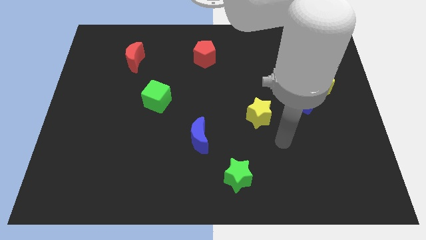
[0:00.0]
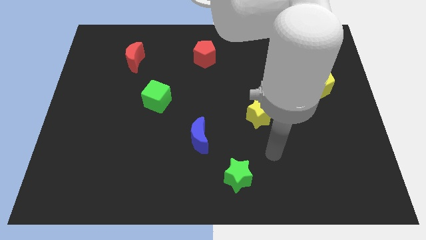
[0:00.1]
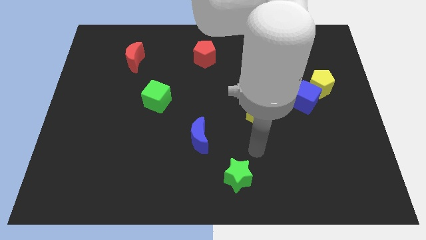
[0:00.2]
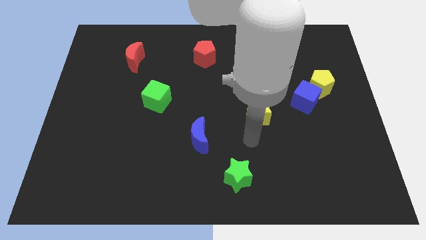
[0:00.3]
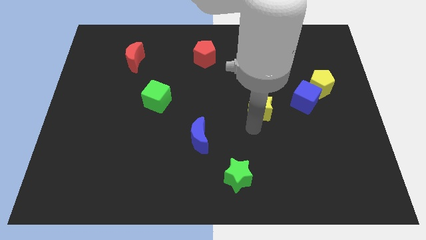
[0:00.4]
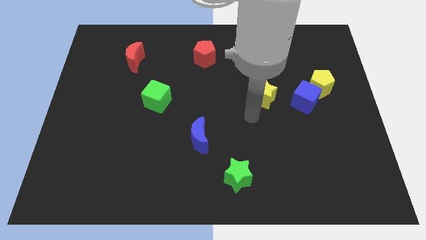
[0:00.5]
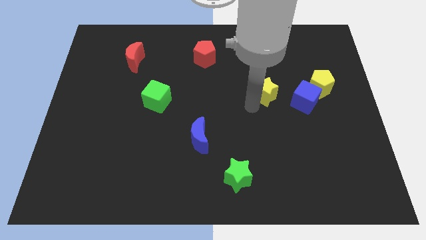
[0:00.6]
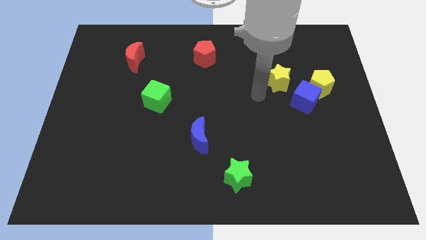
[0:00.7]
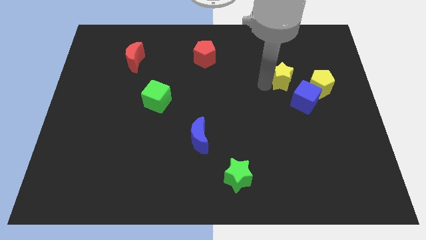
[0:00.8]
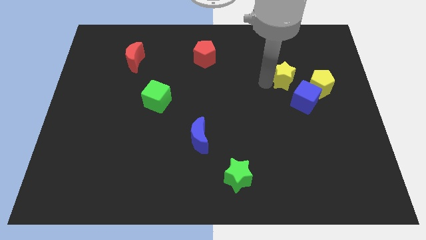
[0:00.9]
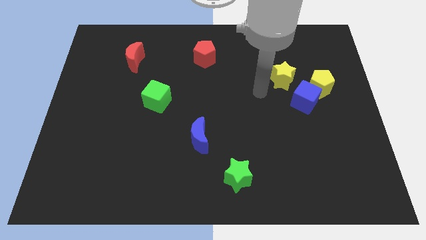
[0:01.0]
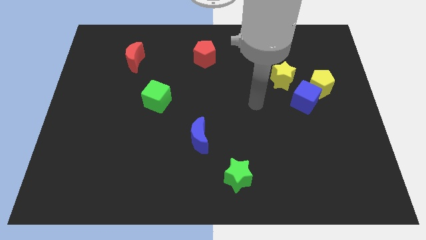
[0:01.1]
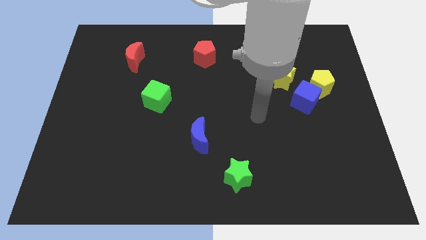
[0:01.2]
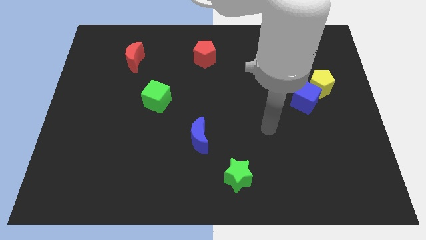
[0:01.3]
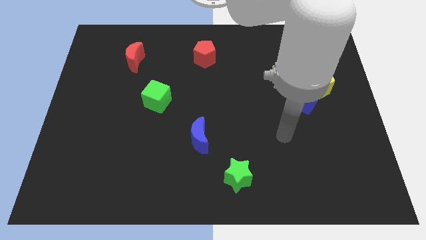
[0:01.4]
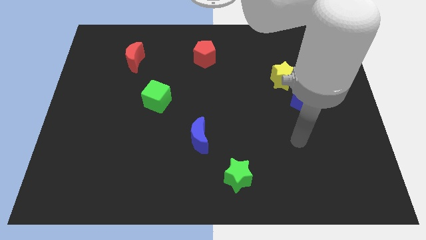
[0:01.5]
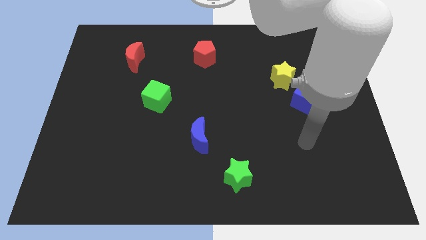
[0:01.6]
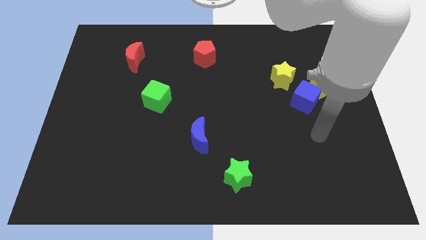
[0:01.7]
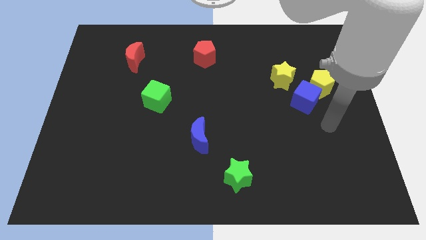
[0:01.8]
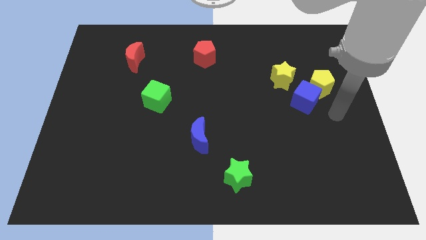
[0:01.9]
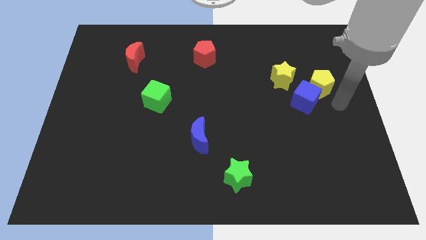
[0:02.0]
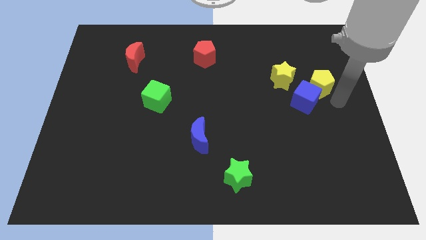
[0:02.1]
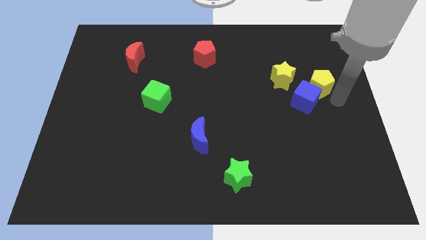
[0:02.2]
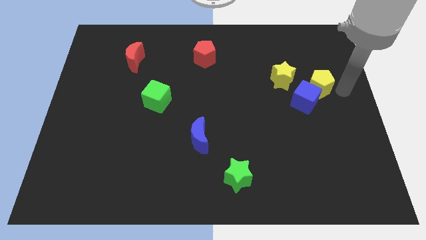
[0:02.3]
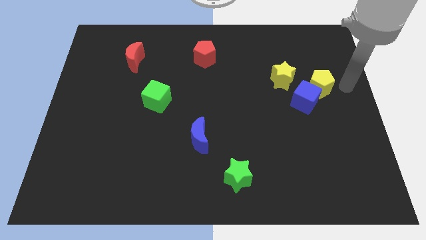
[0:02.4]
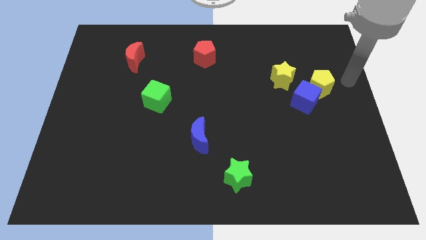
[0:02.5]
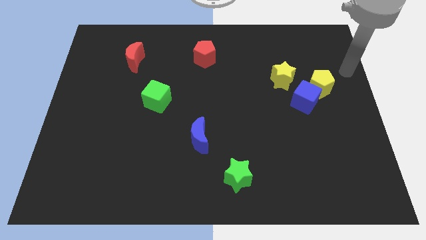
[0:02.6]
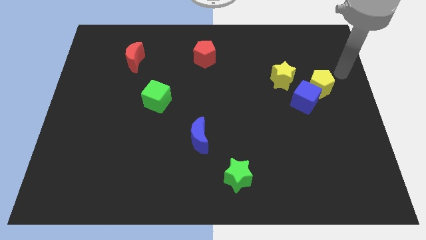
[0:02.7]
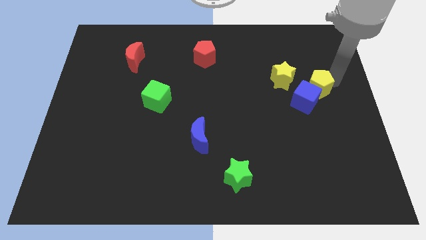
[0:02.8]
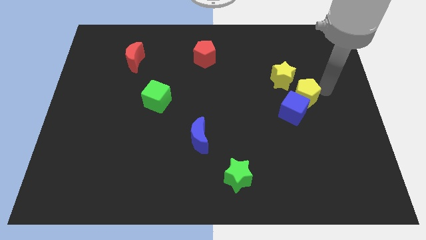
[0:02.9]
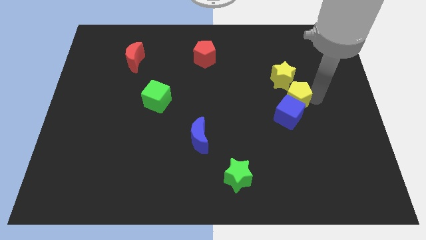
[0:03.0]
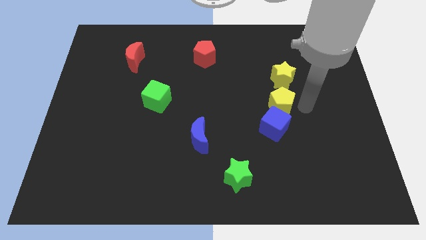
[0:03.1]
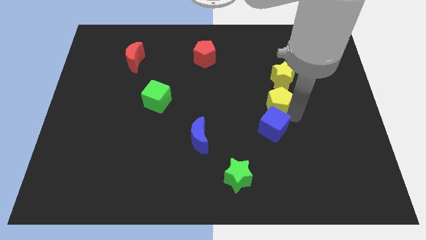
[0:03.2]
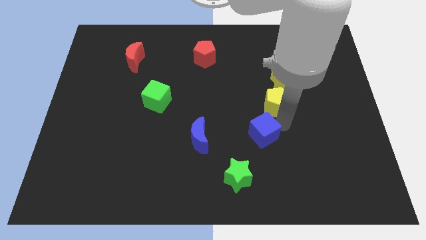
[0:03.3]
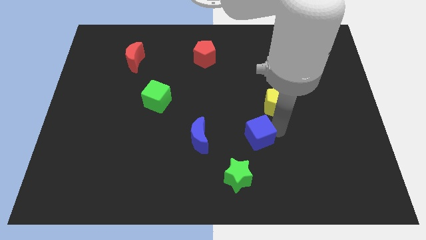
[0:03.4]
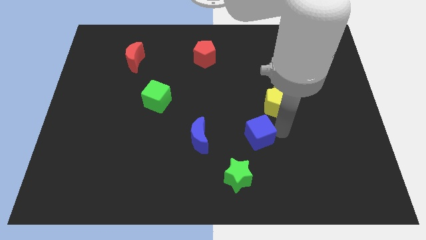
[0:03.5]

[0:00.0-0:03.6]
arrange the yellow star yellow pentagon blue cube in a diagonal line with the green star

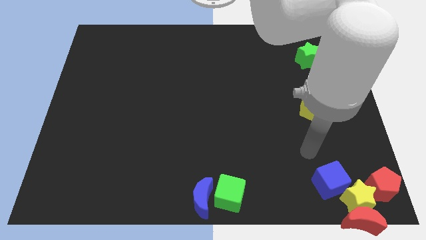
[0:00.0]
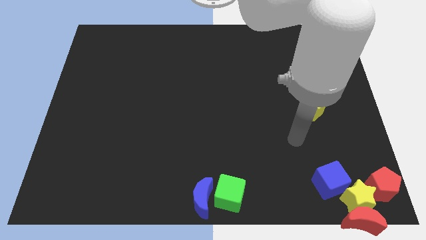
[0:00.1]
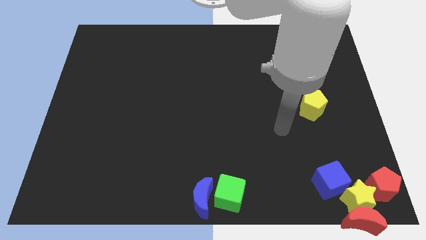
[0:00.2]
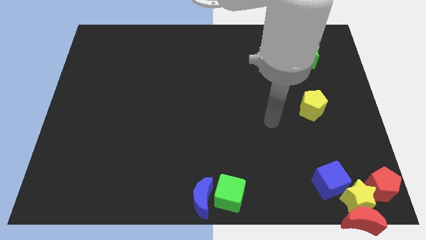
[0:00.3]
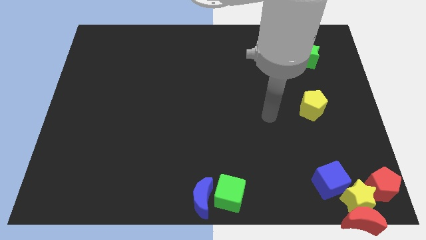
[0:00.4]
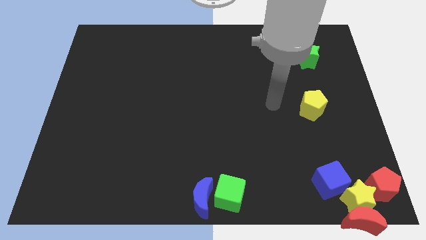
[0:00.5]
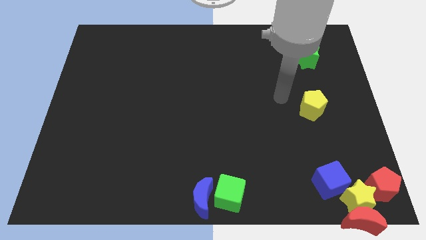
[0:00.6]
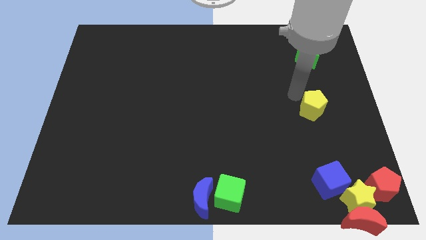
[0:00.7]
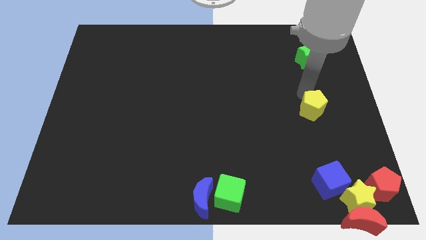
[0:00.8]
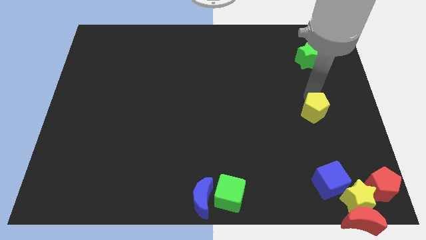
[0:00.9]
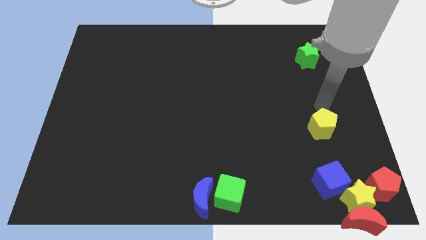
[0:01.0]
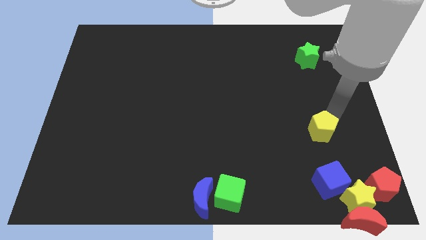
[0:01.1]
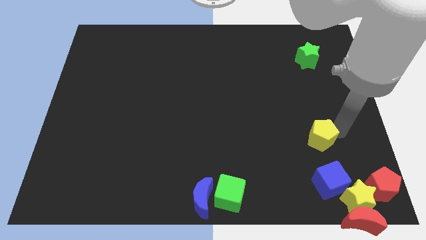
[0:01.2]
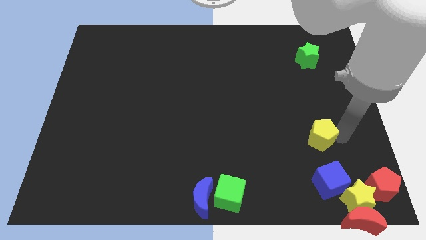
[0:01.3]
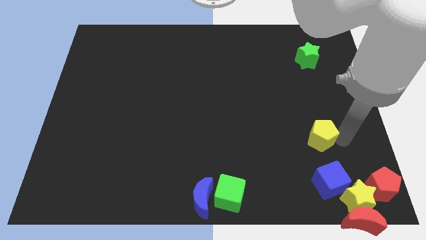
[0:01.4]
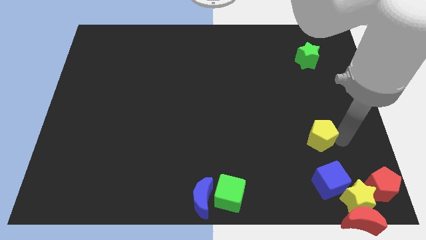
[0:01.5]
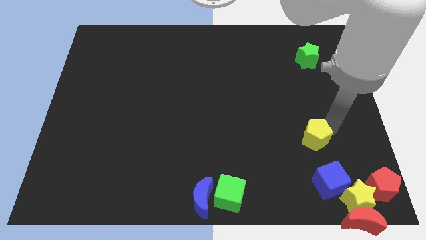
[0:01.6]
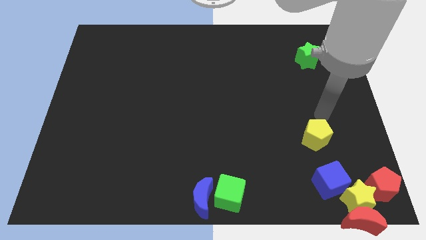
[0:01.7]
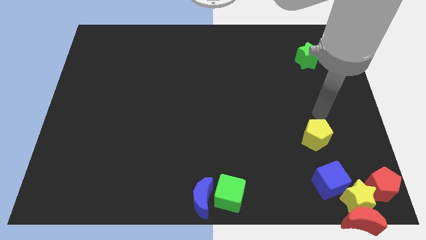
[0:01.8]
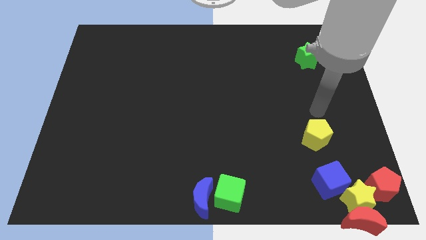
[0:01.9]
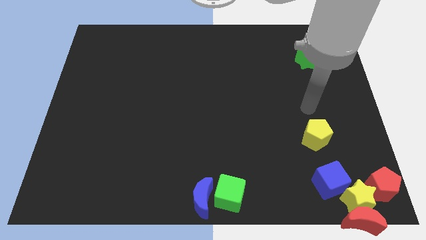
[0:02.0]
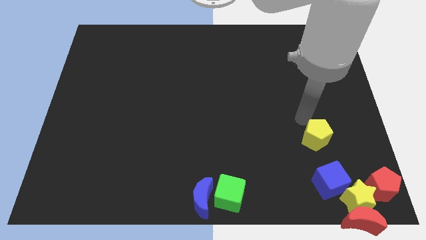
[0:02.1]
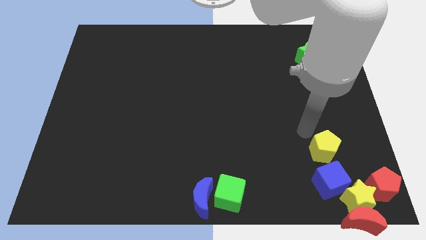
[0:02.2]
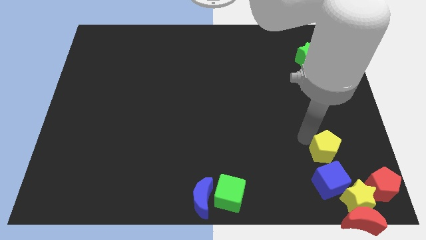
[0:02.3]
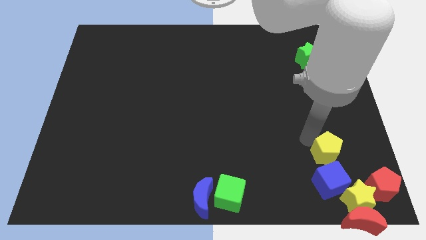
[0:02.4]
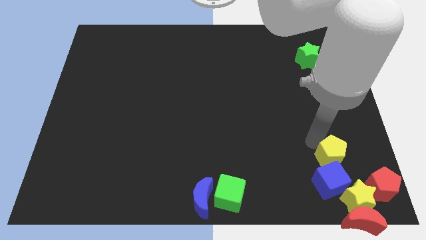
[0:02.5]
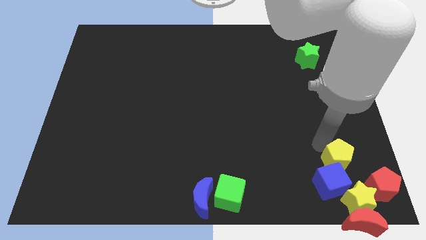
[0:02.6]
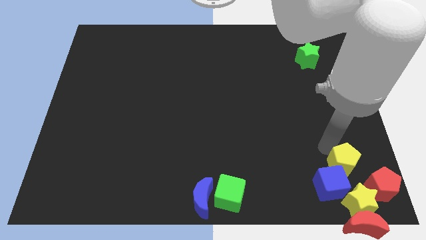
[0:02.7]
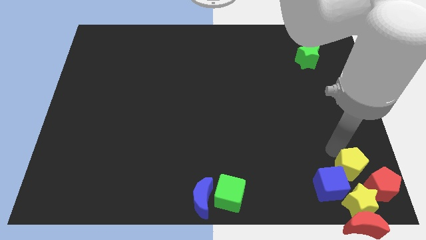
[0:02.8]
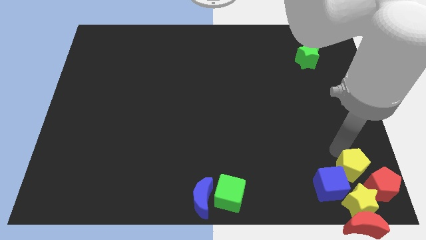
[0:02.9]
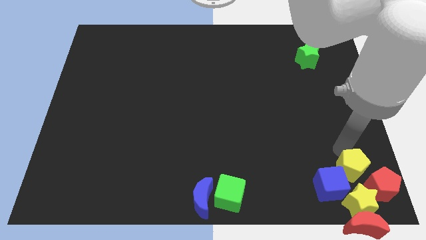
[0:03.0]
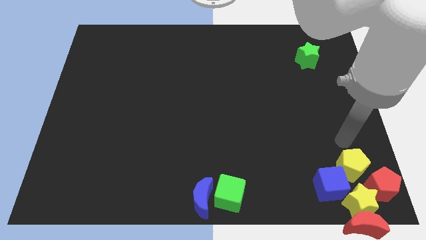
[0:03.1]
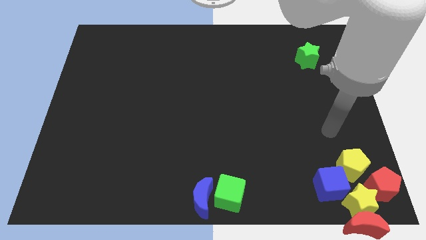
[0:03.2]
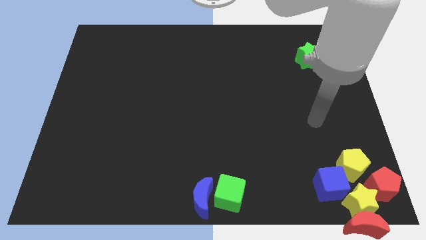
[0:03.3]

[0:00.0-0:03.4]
push the yellow pentagon into the group of blocks

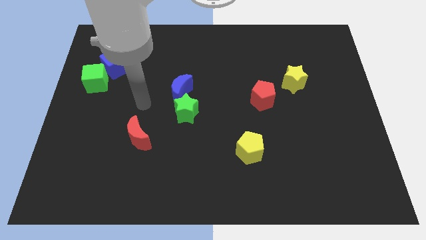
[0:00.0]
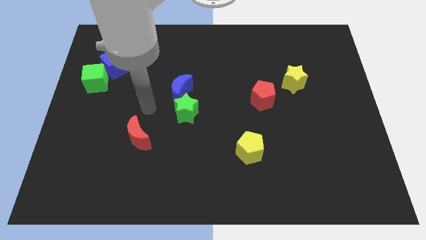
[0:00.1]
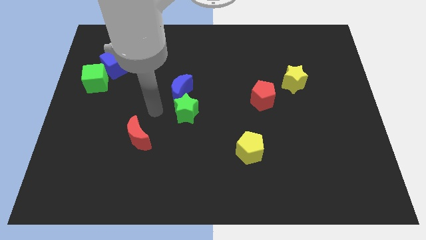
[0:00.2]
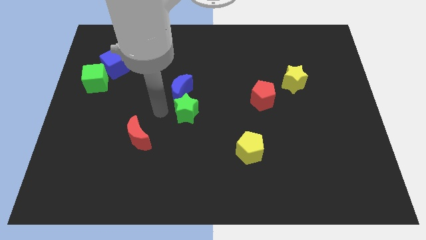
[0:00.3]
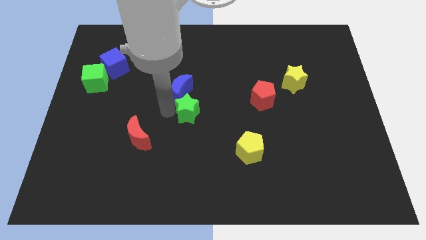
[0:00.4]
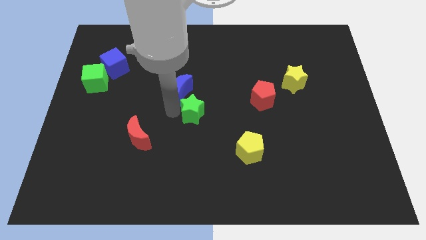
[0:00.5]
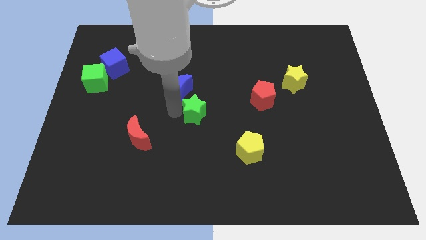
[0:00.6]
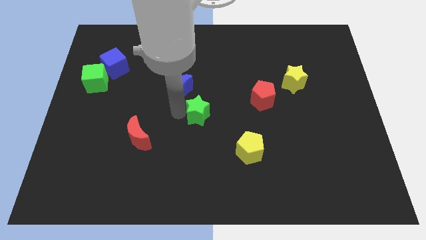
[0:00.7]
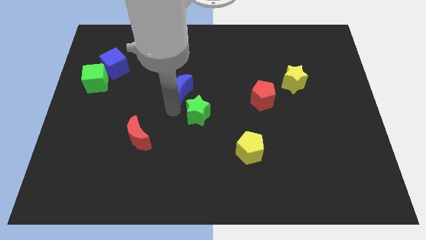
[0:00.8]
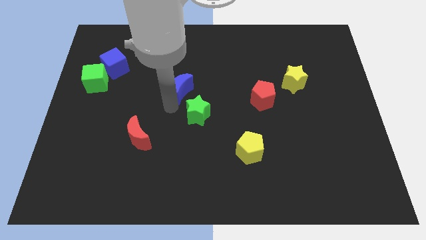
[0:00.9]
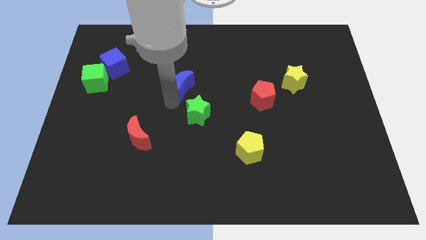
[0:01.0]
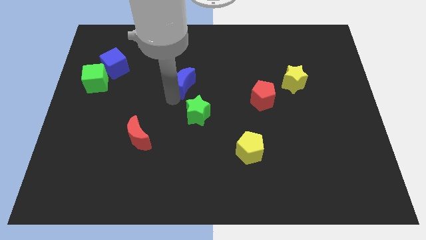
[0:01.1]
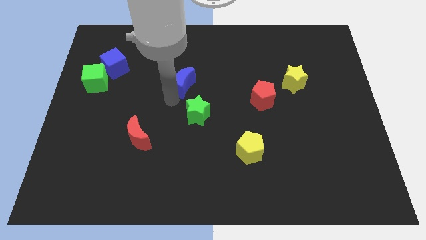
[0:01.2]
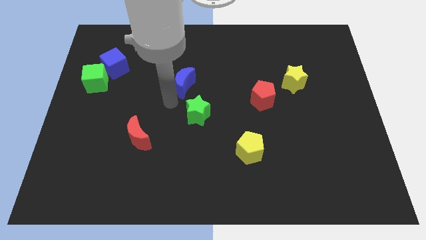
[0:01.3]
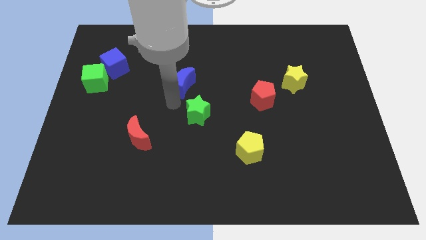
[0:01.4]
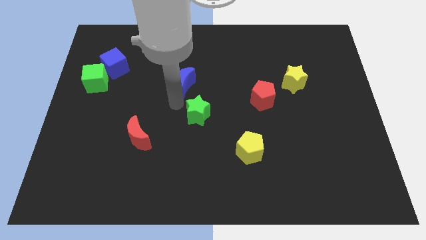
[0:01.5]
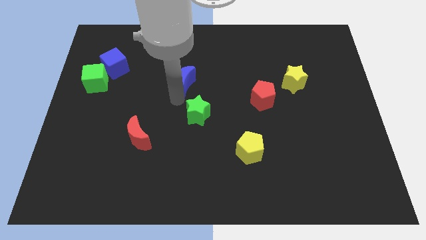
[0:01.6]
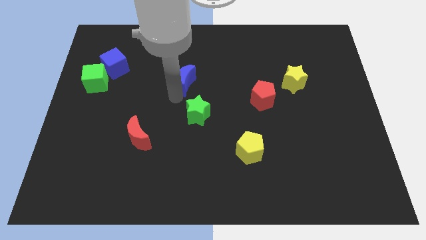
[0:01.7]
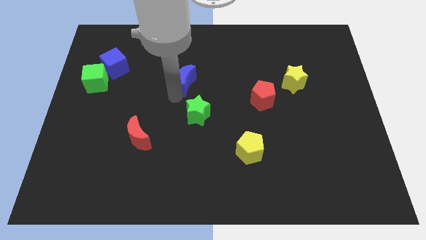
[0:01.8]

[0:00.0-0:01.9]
put the green star between the red pentagon and red moon

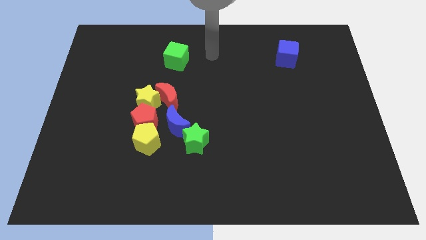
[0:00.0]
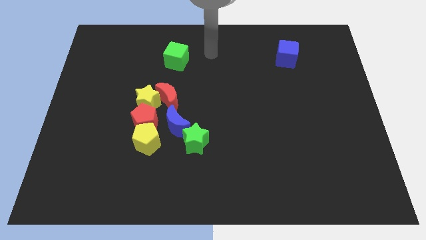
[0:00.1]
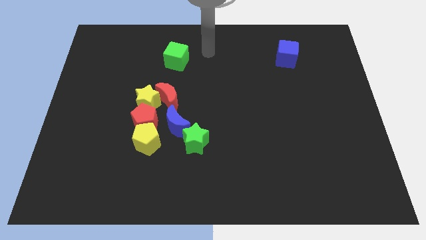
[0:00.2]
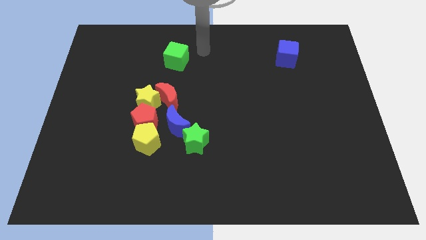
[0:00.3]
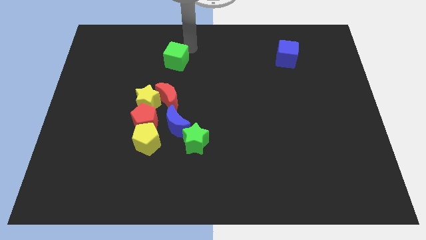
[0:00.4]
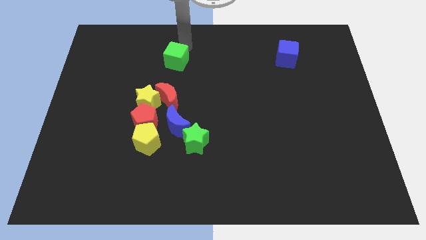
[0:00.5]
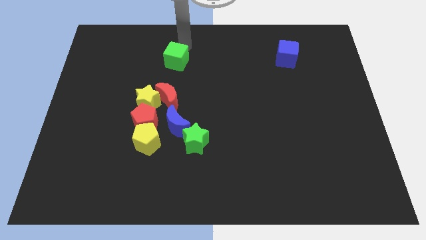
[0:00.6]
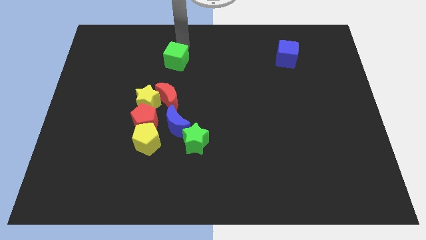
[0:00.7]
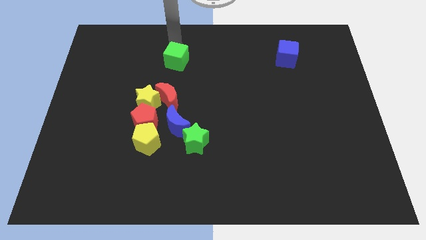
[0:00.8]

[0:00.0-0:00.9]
move the arm towards the top of the green cube
